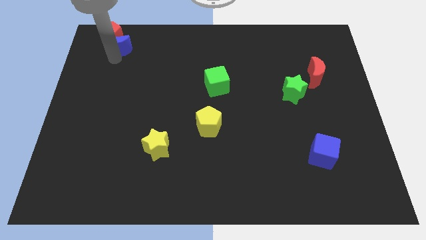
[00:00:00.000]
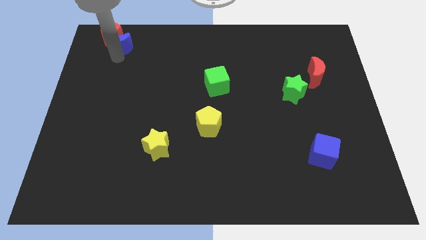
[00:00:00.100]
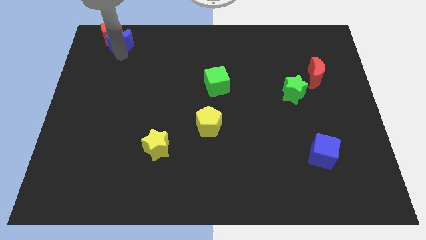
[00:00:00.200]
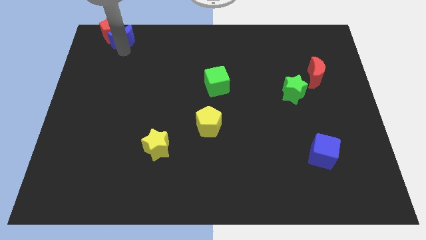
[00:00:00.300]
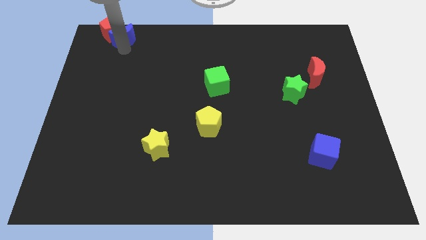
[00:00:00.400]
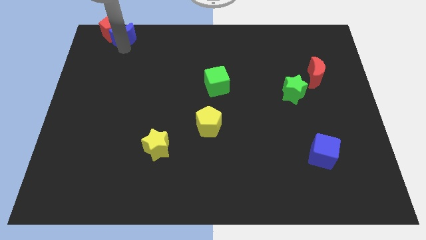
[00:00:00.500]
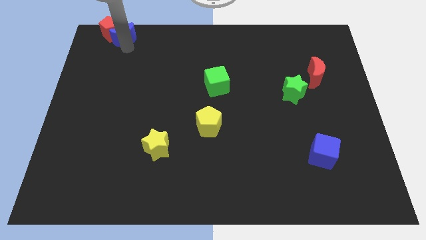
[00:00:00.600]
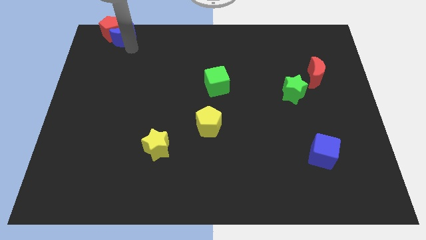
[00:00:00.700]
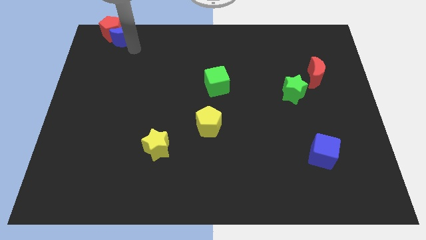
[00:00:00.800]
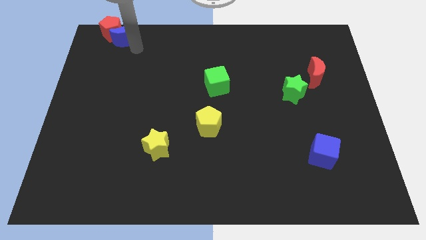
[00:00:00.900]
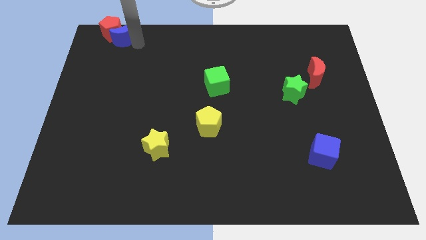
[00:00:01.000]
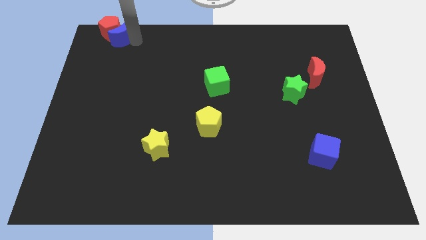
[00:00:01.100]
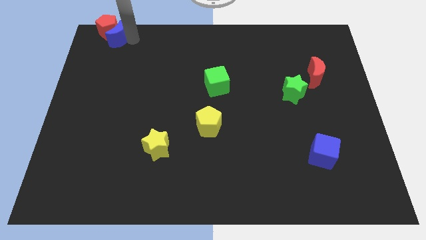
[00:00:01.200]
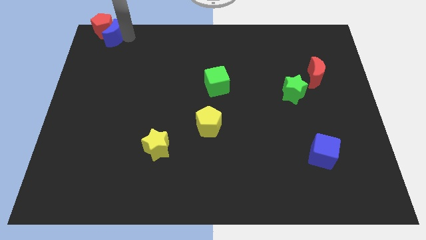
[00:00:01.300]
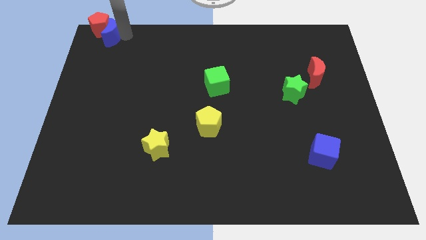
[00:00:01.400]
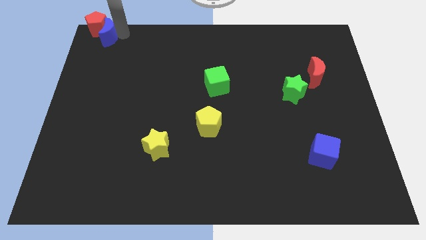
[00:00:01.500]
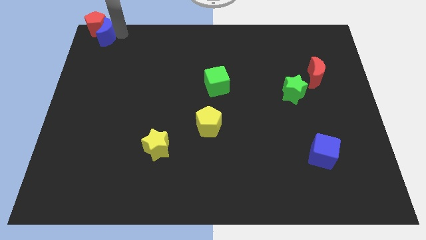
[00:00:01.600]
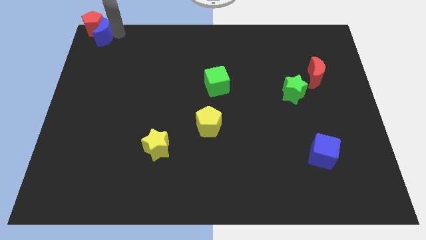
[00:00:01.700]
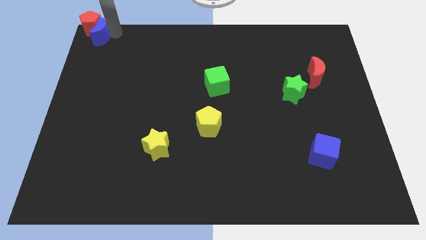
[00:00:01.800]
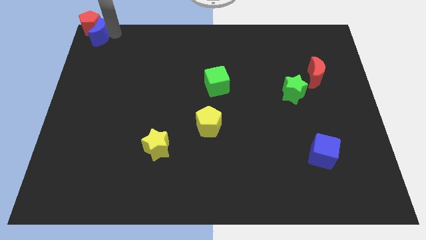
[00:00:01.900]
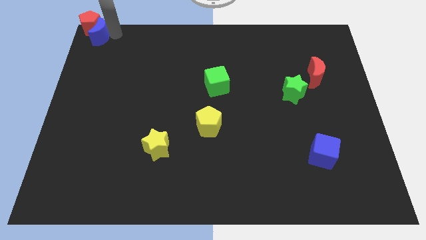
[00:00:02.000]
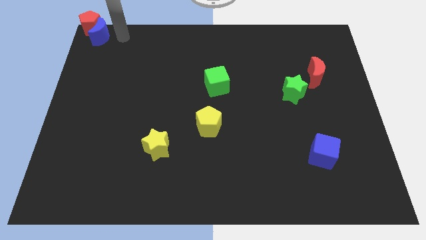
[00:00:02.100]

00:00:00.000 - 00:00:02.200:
push the red pentagon and the blue crescent at the top right of the board

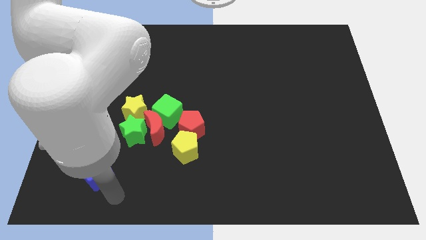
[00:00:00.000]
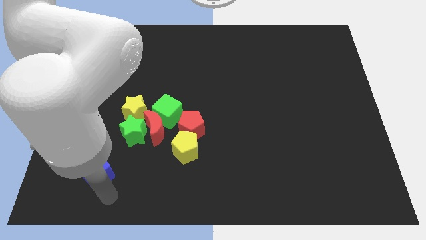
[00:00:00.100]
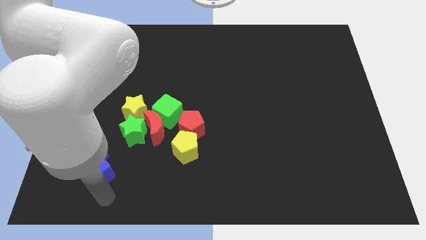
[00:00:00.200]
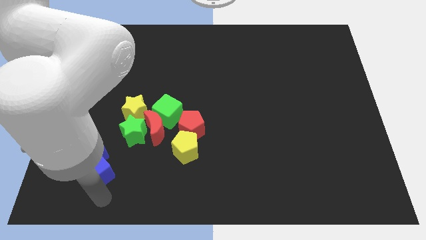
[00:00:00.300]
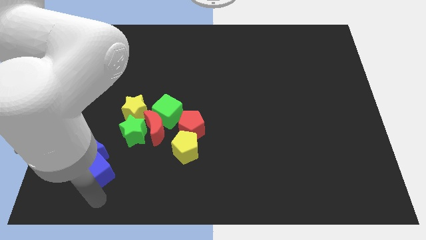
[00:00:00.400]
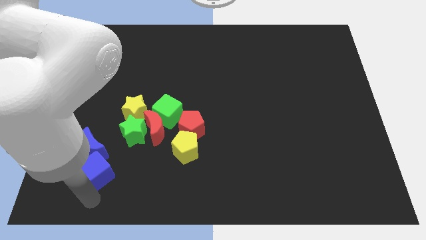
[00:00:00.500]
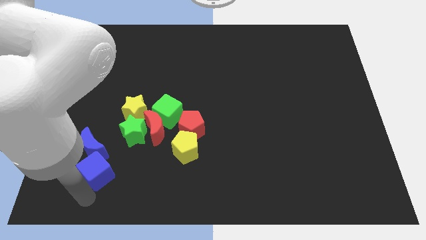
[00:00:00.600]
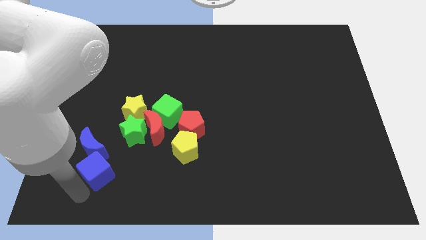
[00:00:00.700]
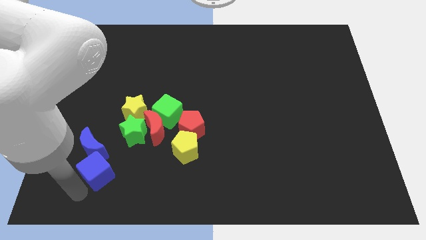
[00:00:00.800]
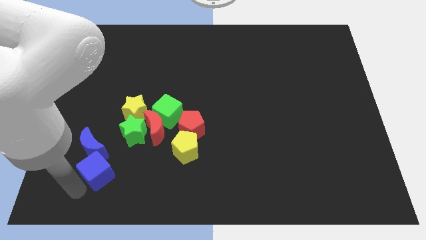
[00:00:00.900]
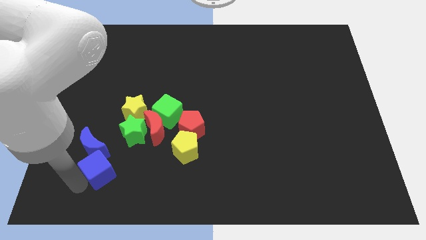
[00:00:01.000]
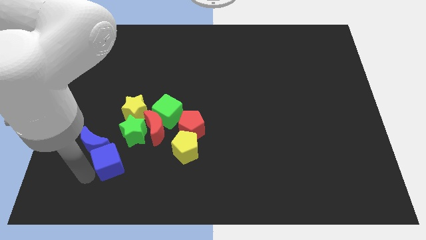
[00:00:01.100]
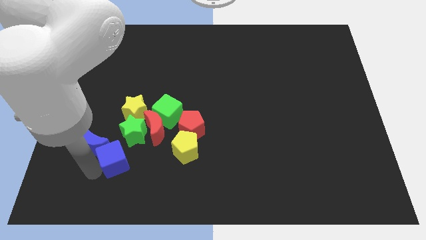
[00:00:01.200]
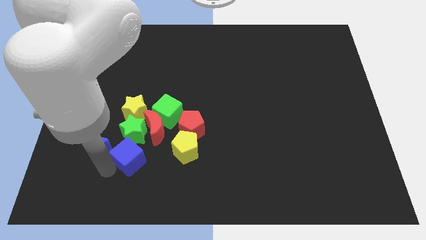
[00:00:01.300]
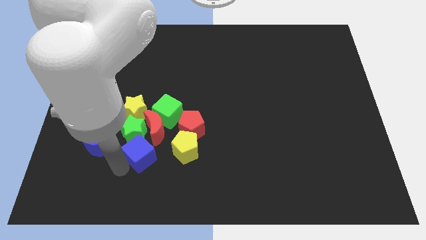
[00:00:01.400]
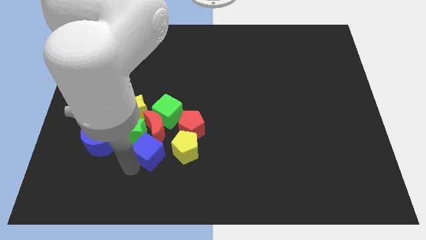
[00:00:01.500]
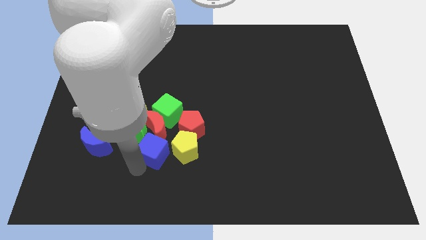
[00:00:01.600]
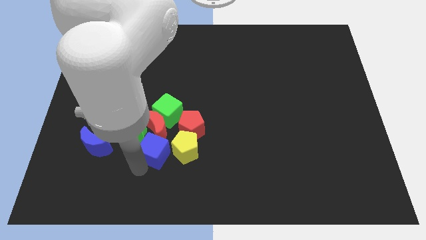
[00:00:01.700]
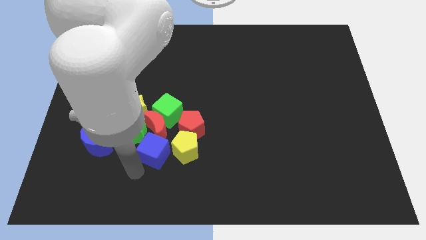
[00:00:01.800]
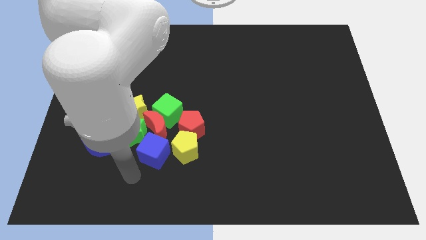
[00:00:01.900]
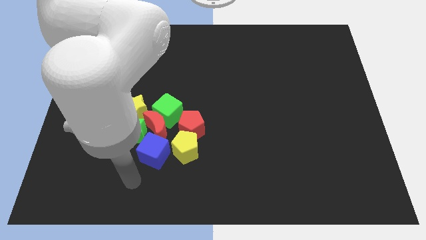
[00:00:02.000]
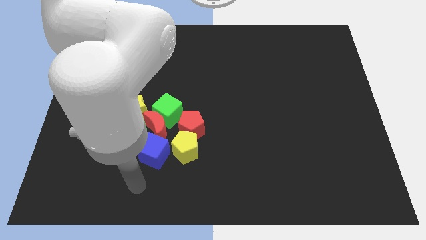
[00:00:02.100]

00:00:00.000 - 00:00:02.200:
move the blue cube into the red moon

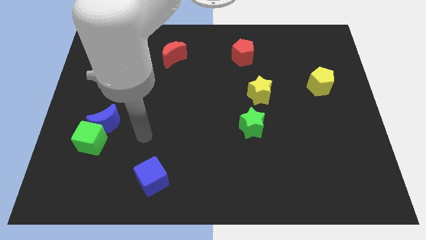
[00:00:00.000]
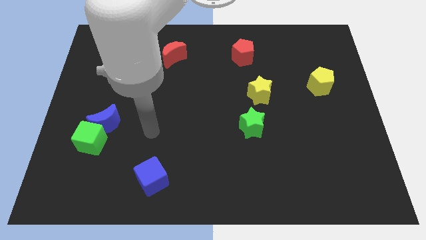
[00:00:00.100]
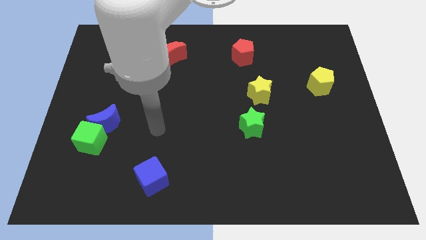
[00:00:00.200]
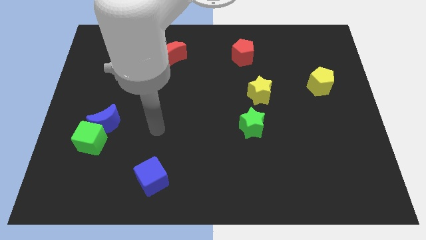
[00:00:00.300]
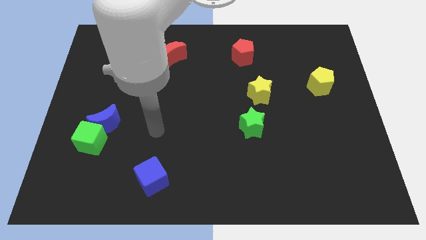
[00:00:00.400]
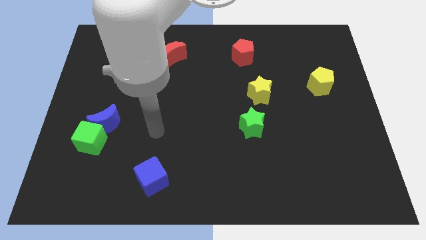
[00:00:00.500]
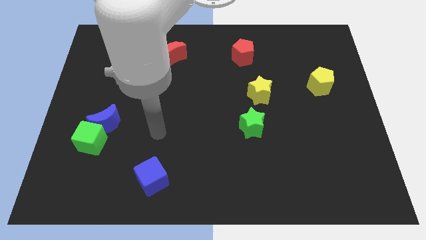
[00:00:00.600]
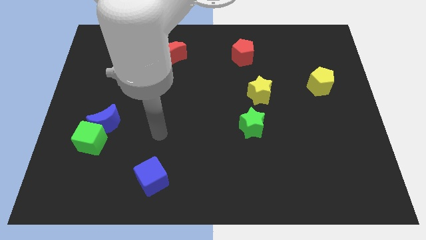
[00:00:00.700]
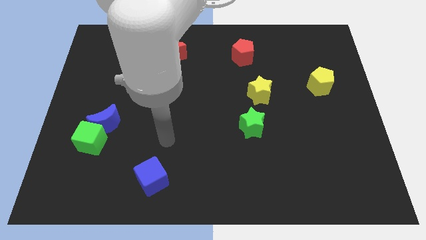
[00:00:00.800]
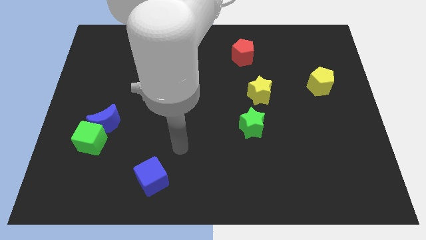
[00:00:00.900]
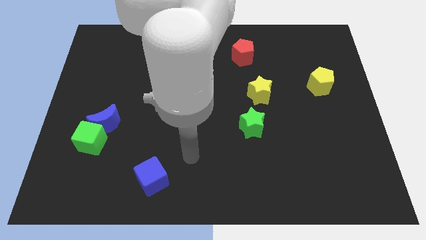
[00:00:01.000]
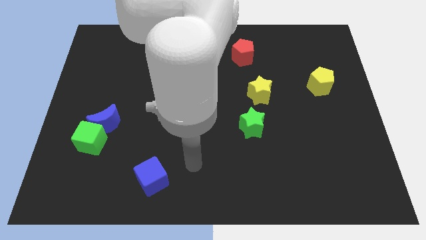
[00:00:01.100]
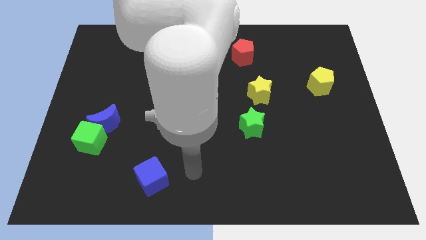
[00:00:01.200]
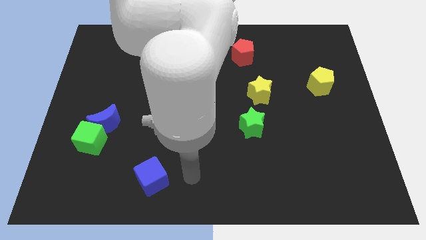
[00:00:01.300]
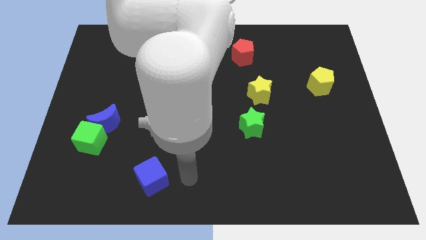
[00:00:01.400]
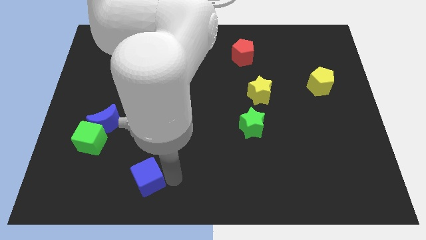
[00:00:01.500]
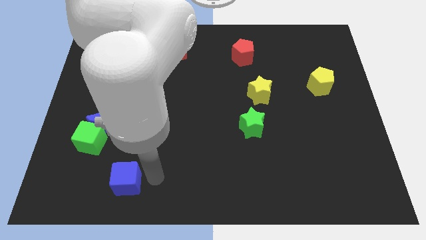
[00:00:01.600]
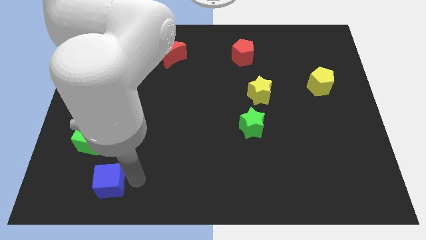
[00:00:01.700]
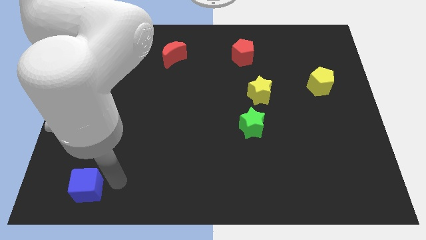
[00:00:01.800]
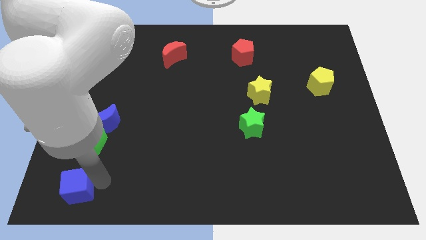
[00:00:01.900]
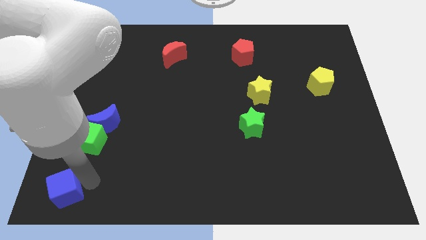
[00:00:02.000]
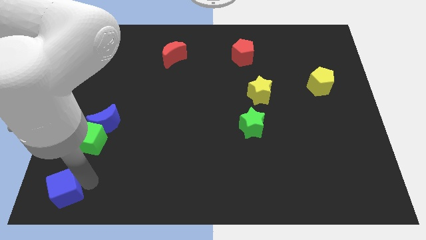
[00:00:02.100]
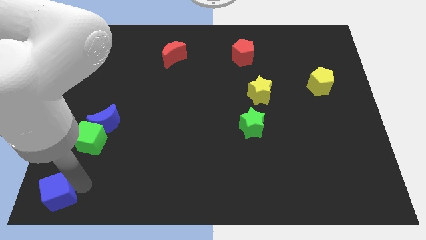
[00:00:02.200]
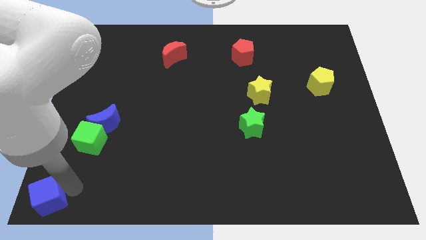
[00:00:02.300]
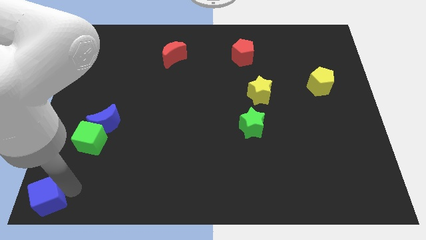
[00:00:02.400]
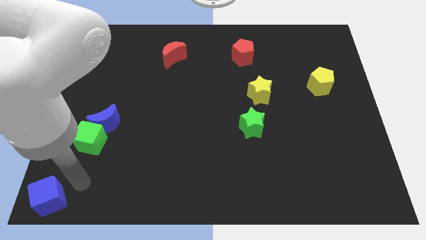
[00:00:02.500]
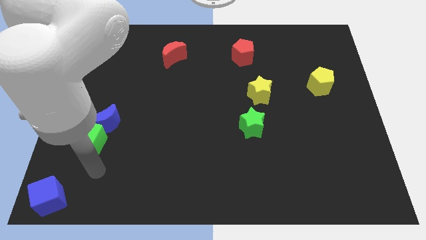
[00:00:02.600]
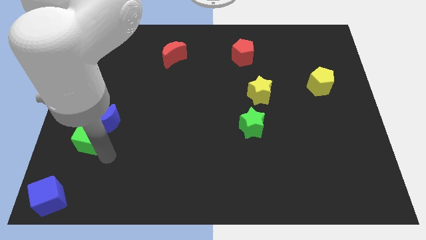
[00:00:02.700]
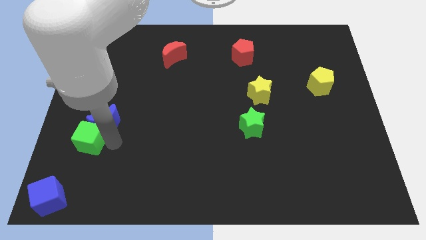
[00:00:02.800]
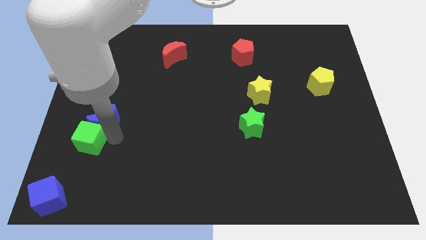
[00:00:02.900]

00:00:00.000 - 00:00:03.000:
push the blue cube to the bottom left corner

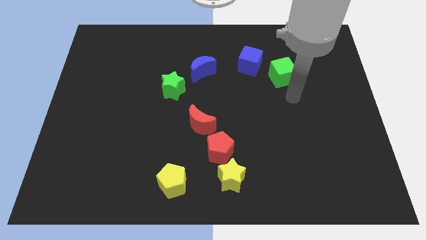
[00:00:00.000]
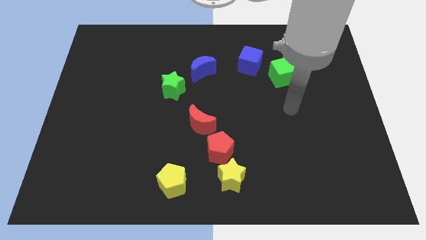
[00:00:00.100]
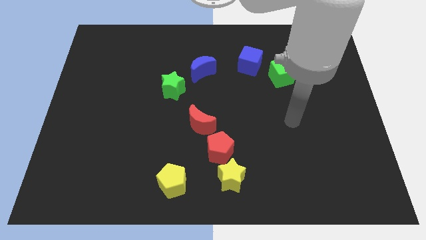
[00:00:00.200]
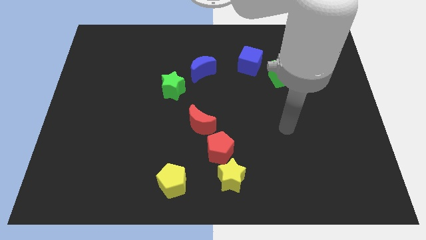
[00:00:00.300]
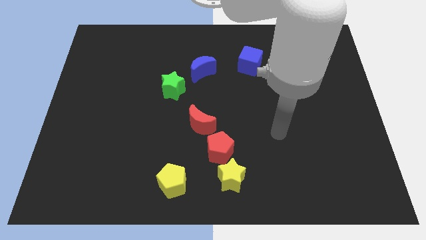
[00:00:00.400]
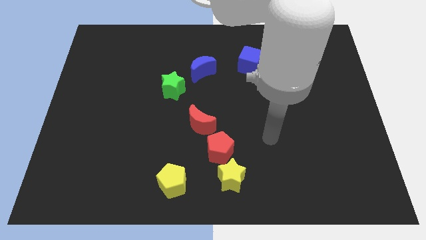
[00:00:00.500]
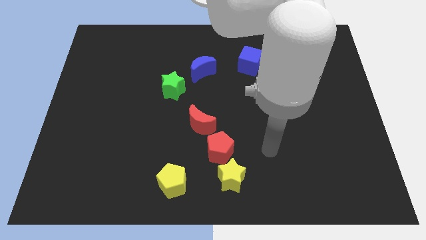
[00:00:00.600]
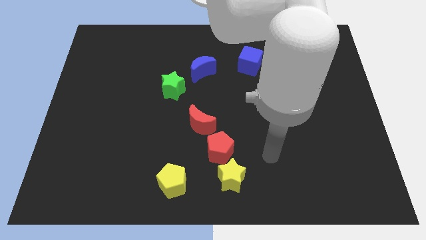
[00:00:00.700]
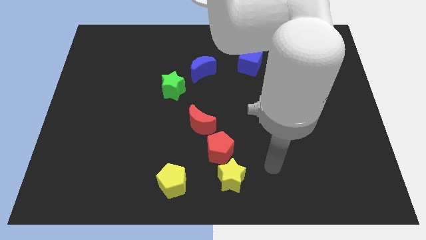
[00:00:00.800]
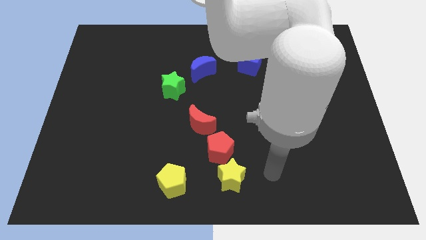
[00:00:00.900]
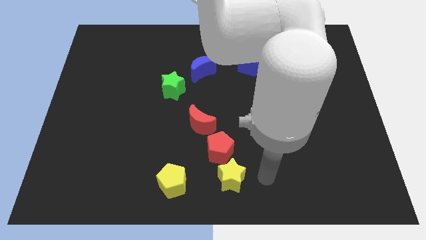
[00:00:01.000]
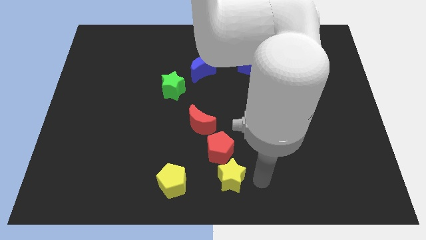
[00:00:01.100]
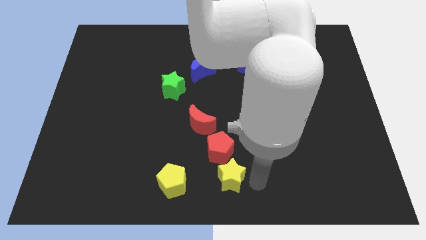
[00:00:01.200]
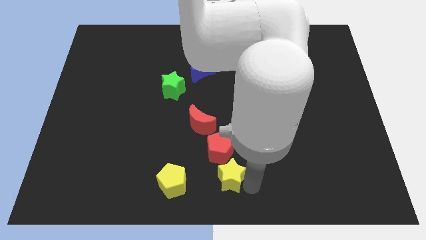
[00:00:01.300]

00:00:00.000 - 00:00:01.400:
move arm to the right of yellow star

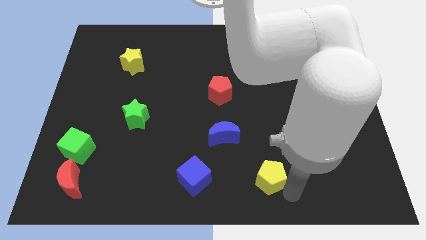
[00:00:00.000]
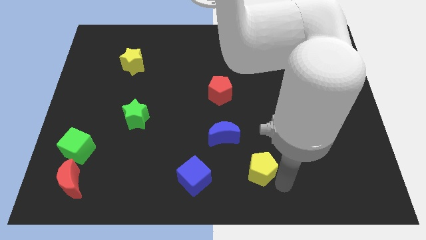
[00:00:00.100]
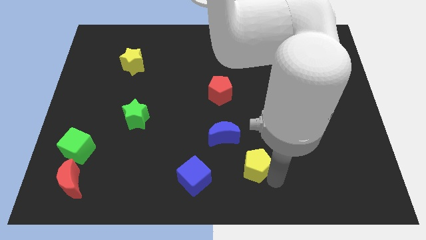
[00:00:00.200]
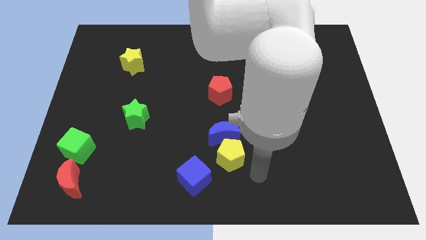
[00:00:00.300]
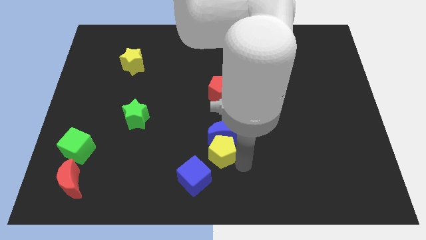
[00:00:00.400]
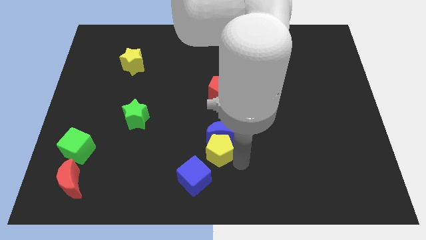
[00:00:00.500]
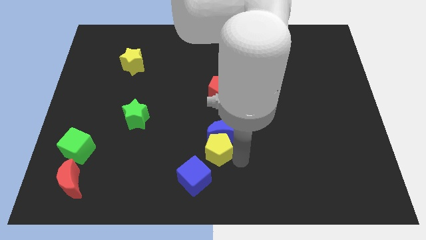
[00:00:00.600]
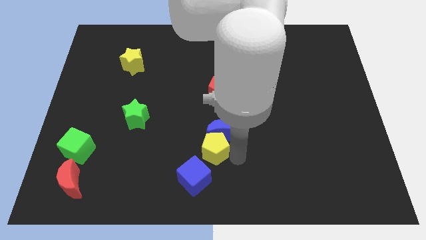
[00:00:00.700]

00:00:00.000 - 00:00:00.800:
push the yellow pentagon to the bottom of the blue crescent
